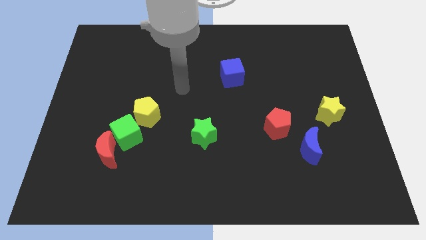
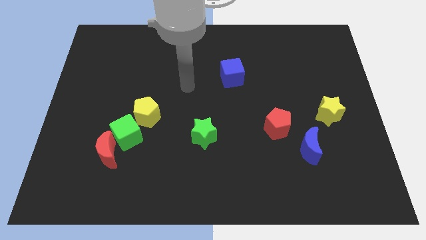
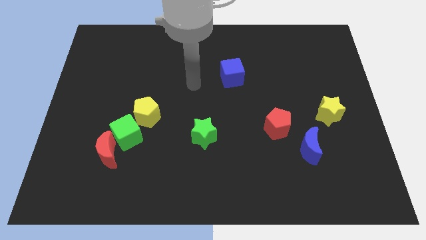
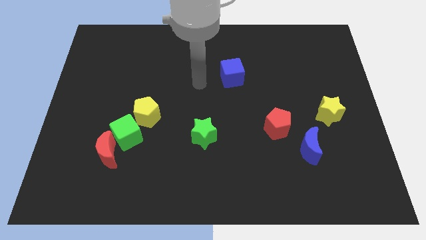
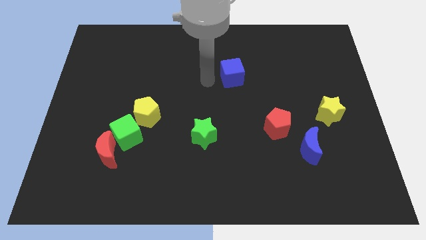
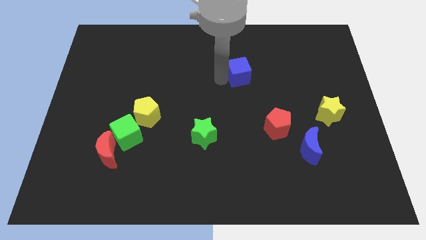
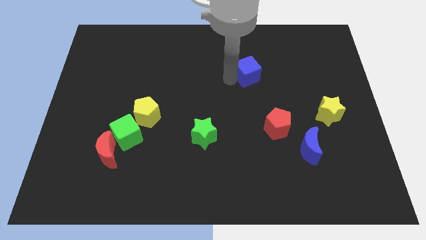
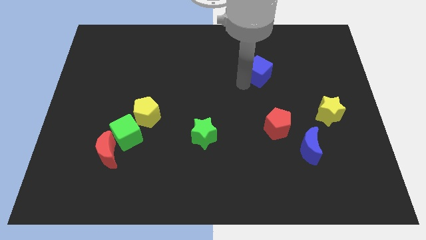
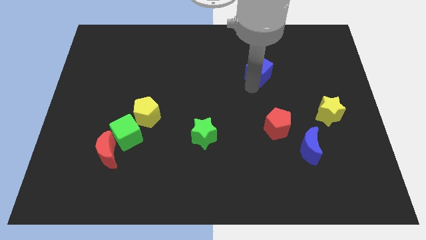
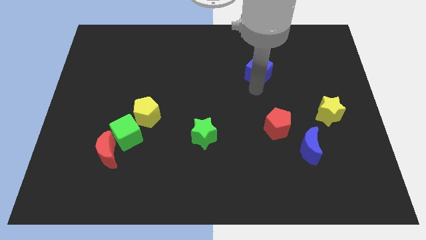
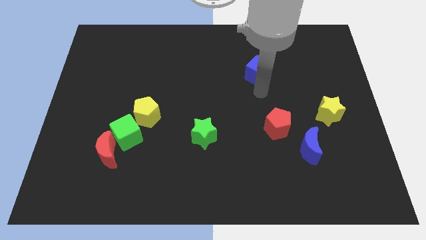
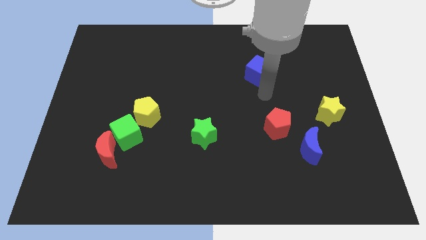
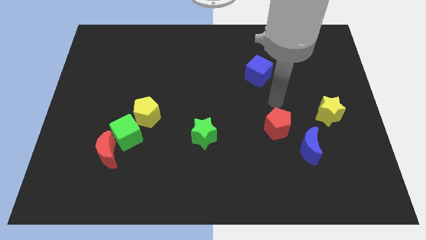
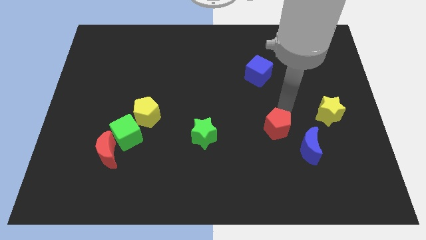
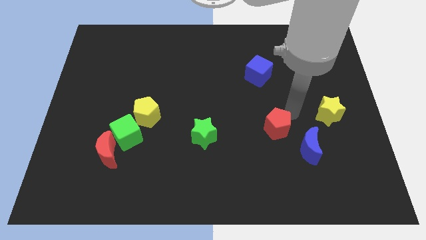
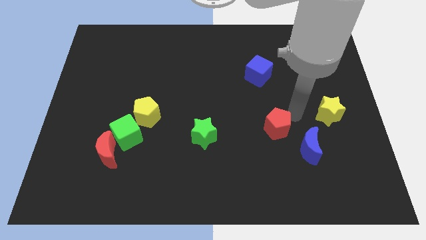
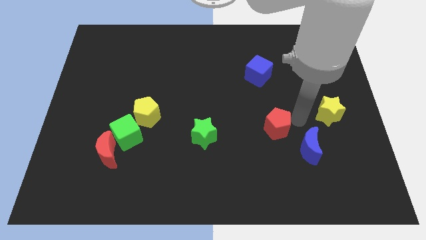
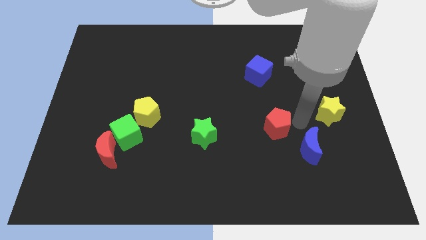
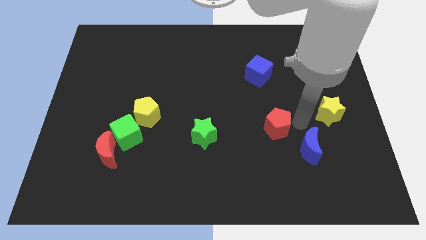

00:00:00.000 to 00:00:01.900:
move the arm to the right of the red pentagon

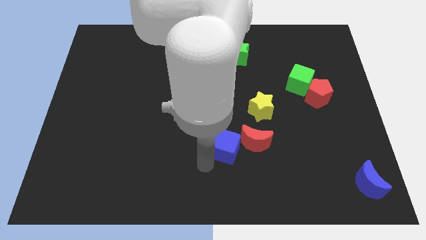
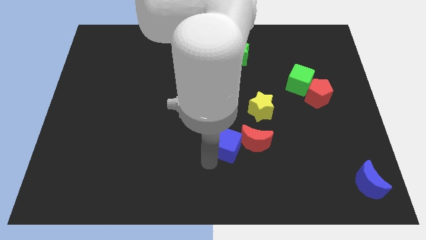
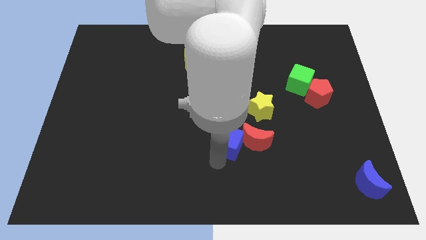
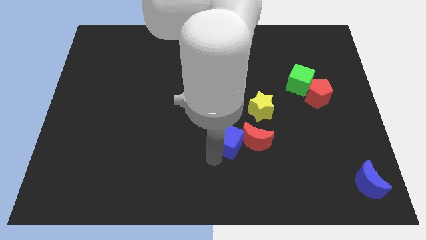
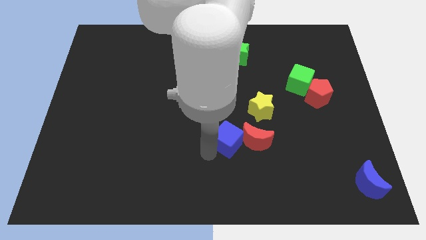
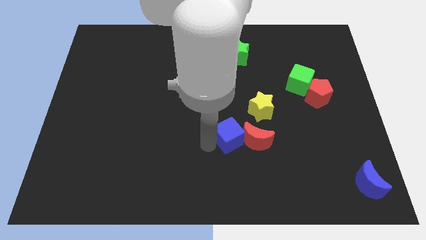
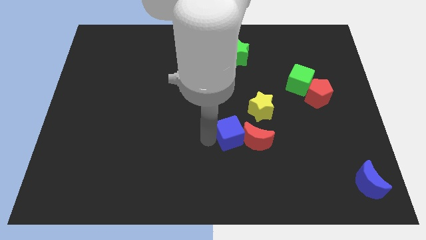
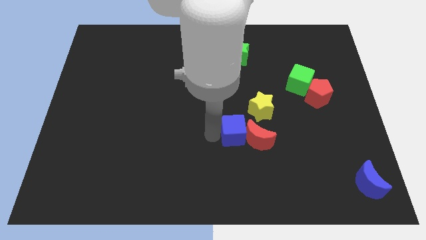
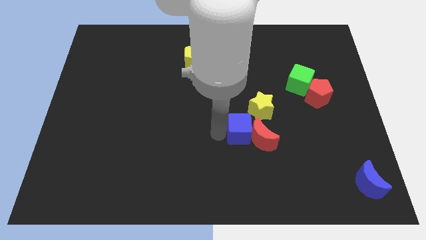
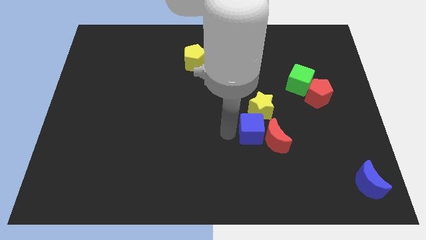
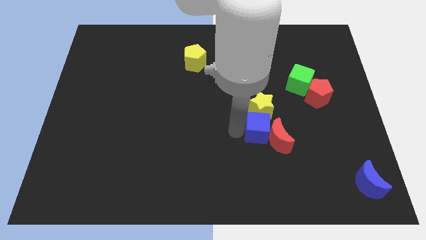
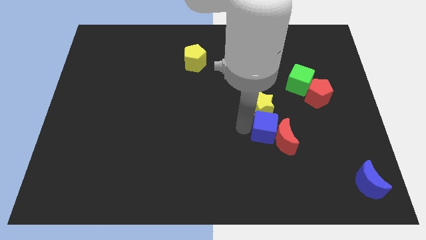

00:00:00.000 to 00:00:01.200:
move the blue cube vertically below the yellow star

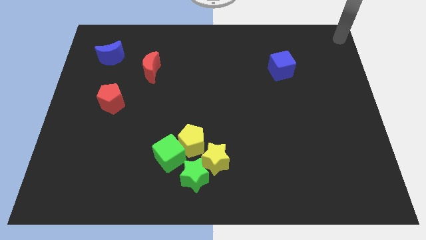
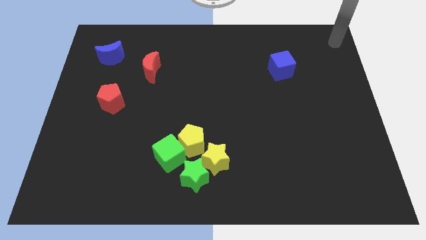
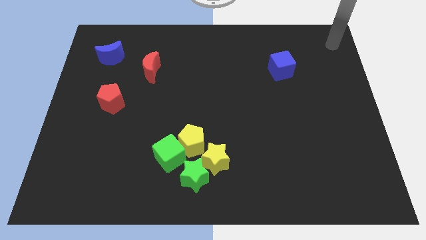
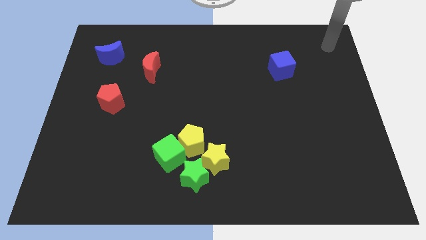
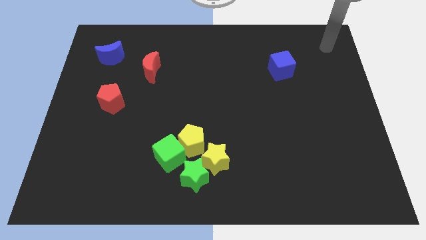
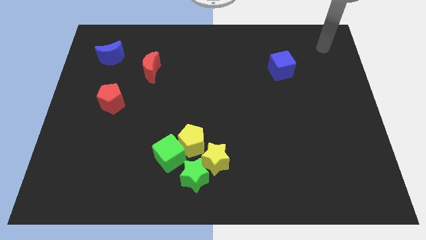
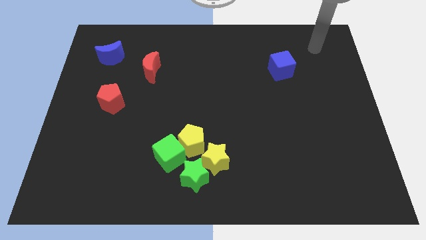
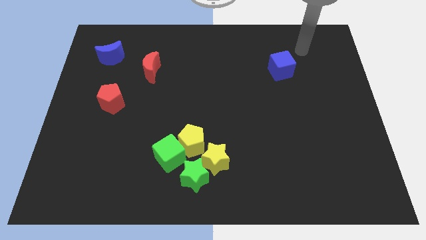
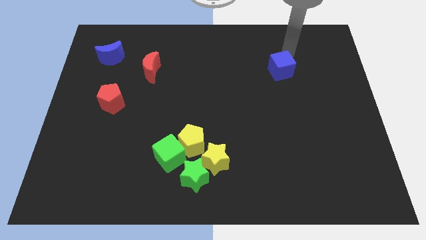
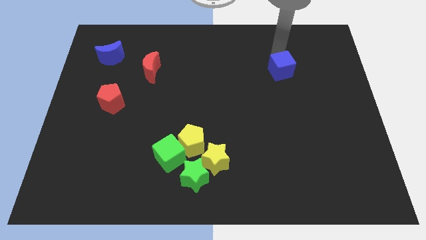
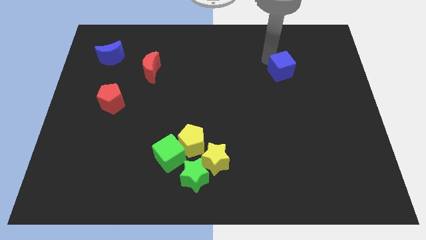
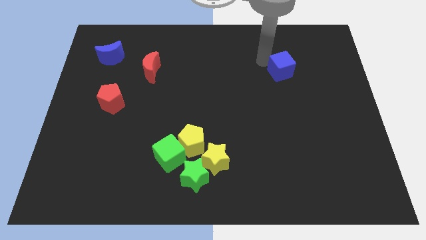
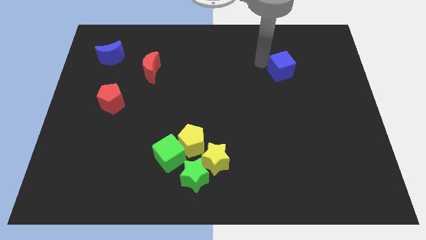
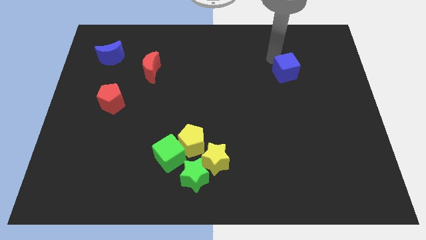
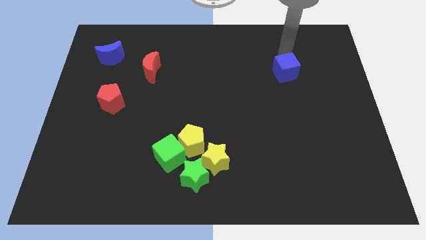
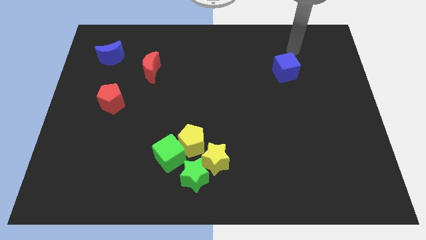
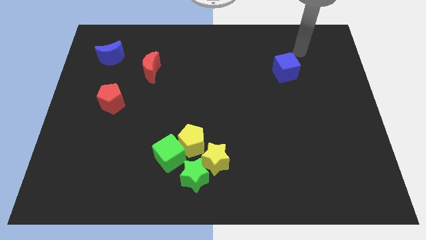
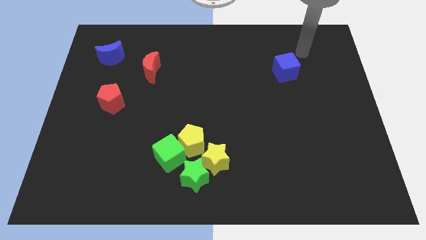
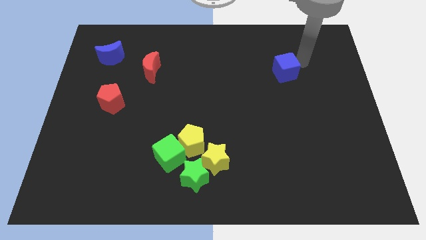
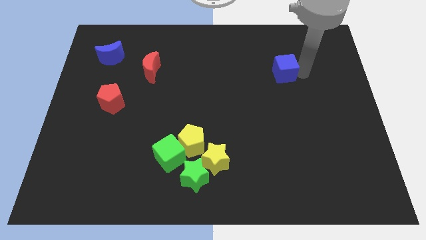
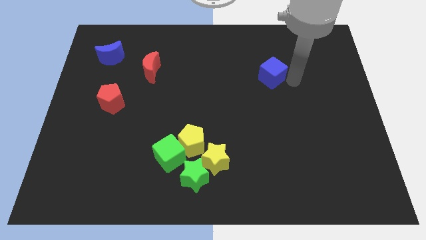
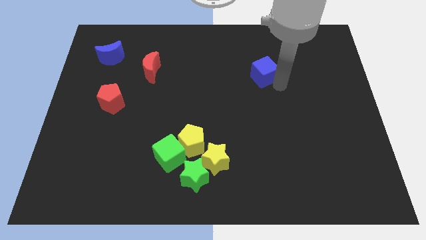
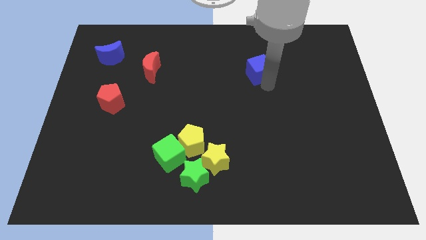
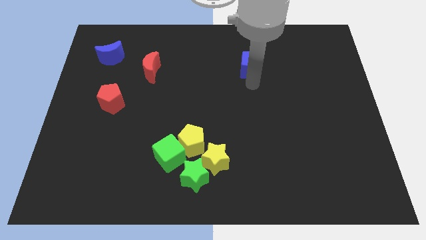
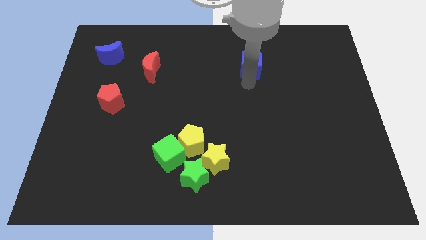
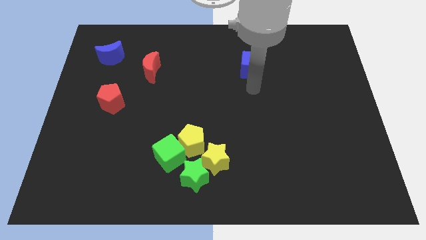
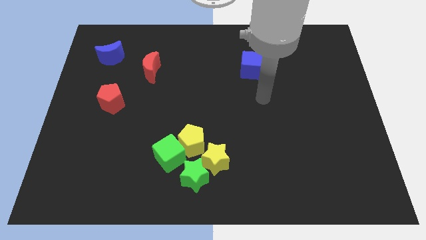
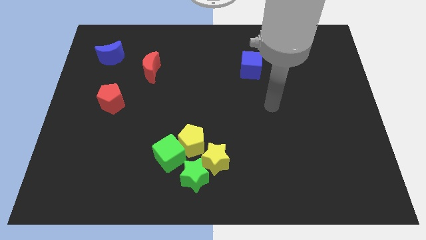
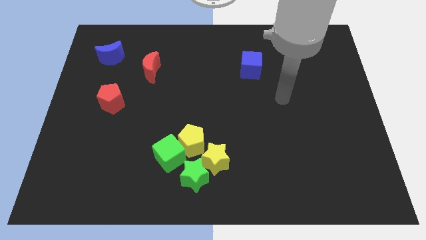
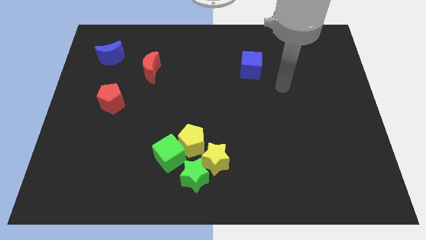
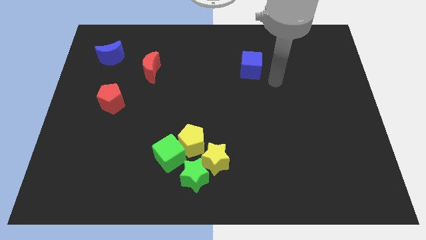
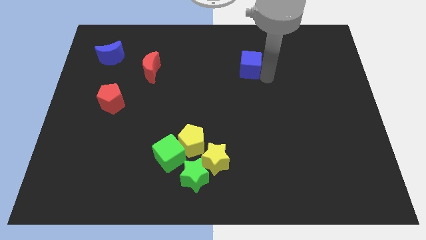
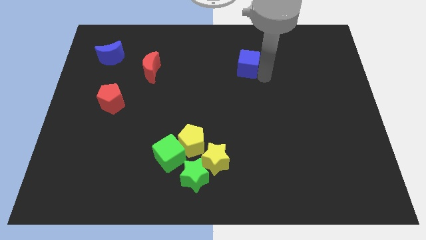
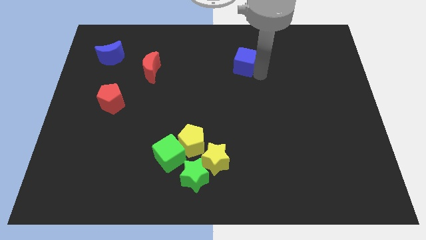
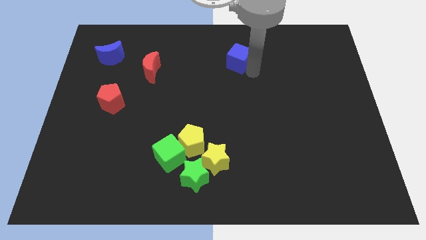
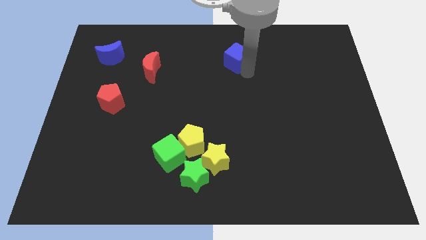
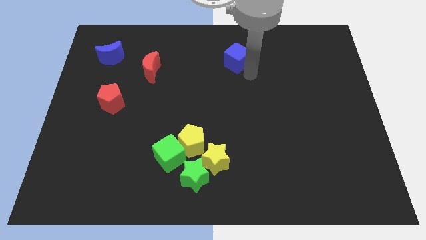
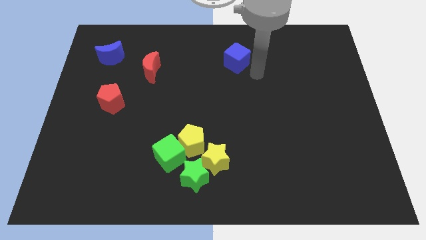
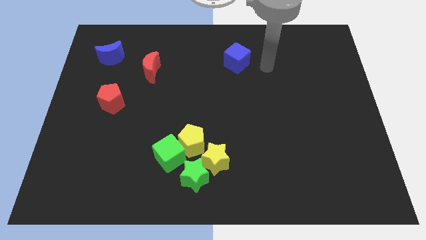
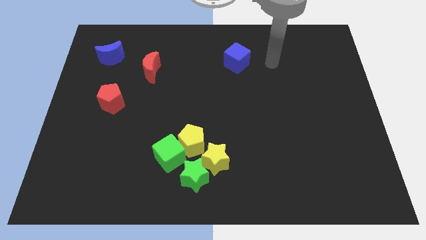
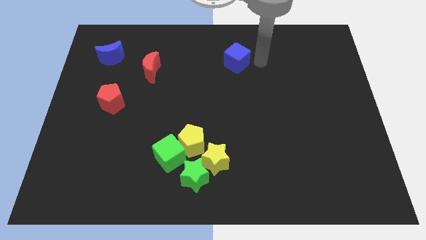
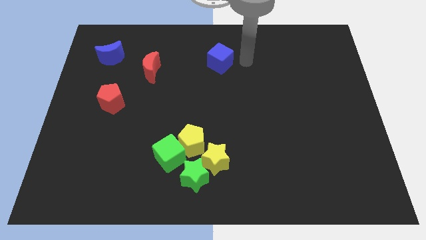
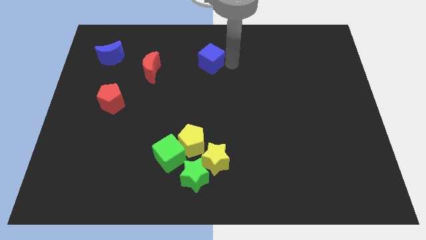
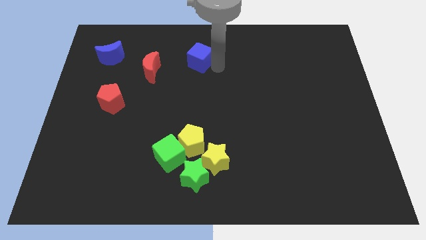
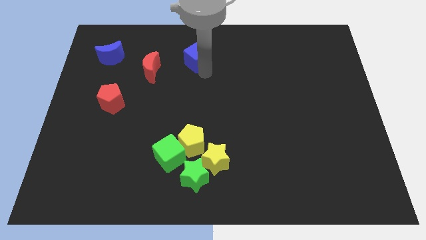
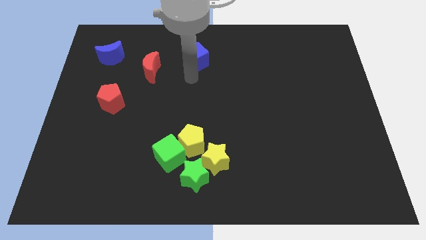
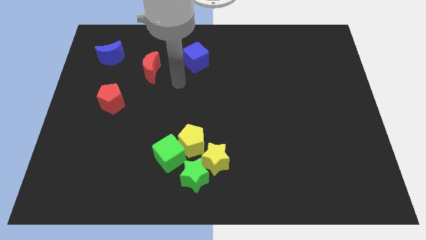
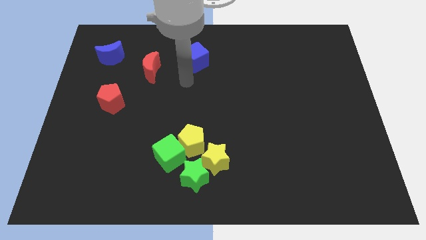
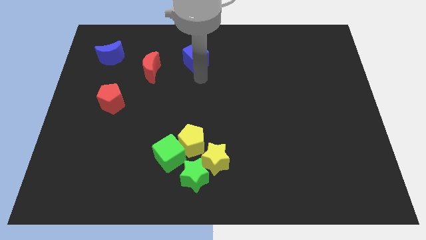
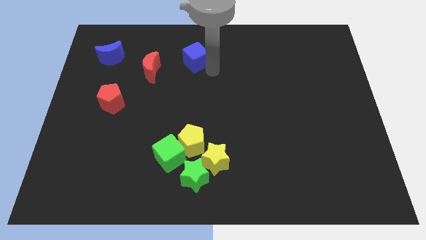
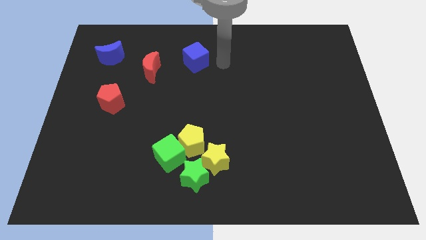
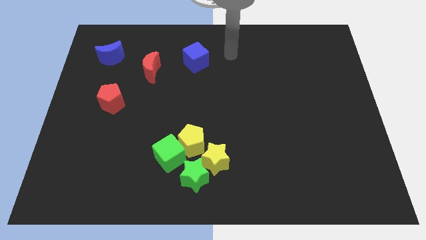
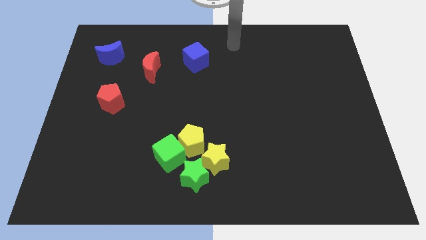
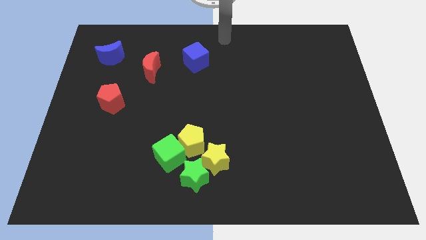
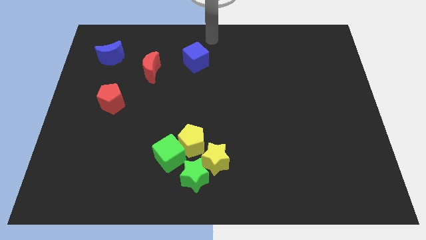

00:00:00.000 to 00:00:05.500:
push the blue cube towards the red crescent

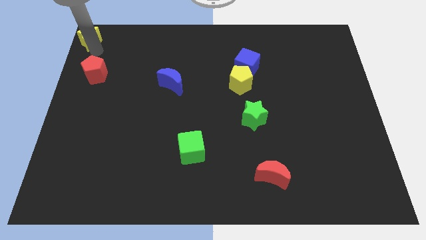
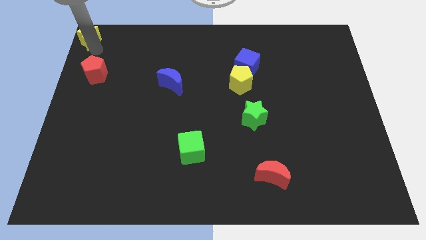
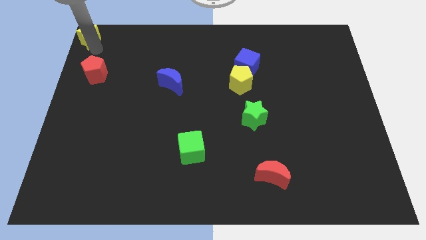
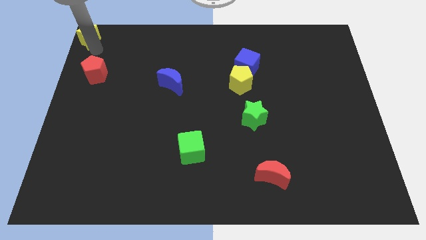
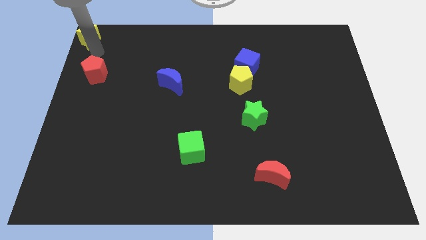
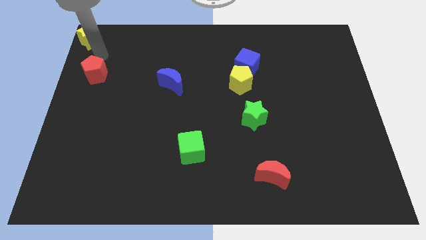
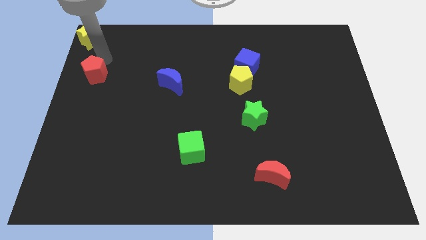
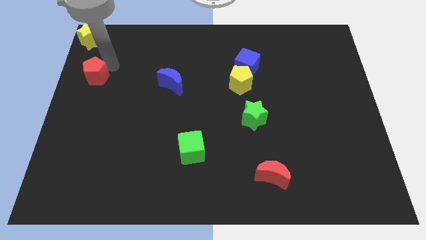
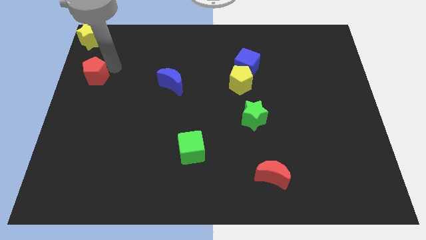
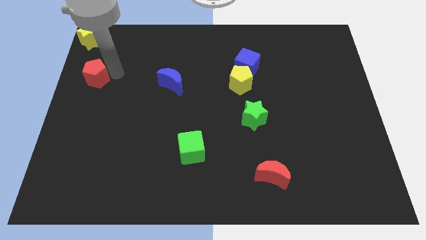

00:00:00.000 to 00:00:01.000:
move the yellow star to the top left corner of the board
